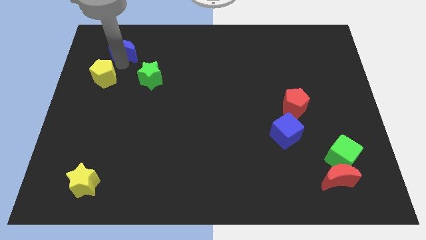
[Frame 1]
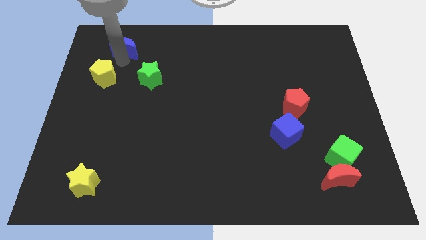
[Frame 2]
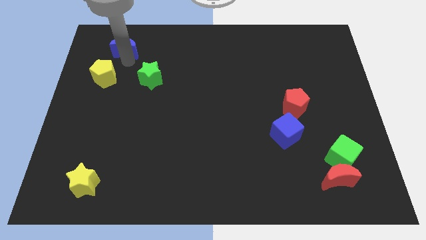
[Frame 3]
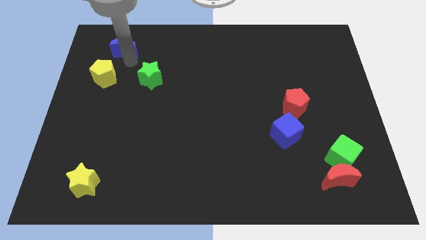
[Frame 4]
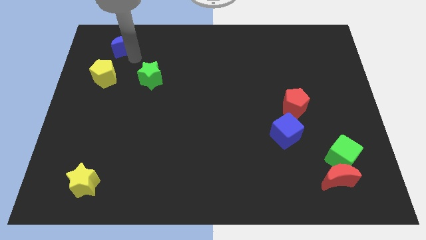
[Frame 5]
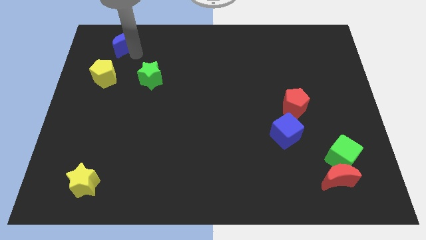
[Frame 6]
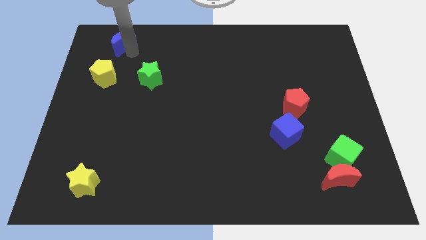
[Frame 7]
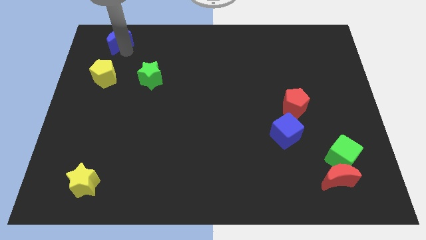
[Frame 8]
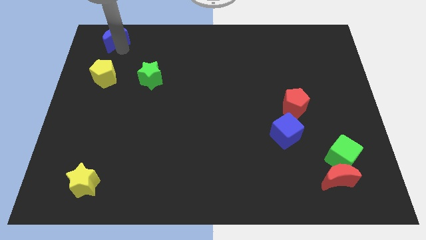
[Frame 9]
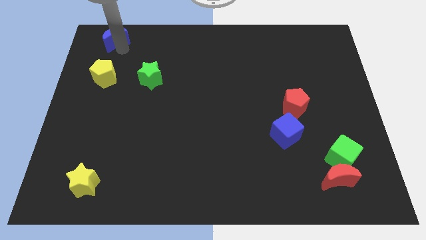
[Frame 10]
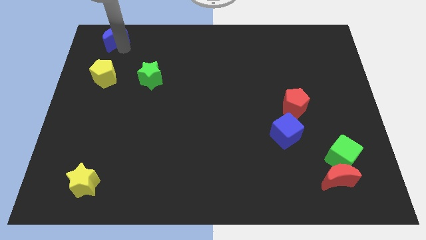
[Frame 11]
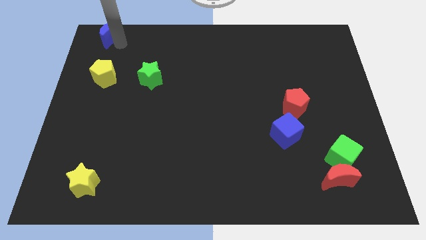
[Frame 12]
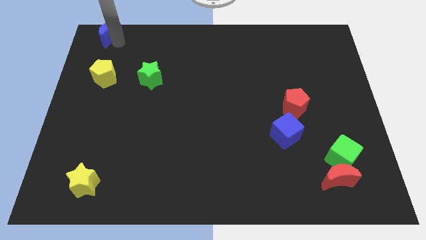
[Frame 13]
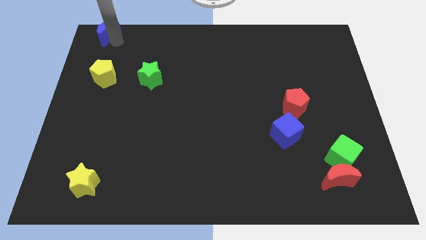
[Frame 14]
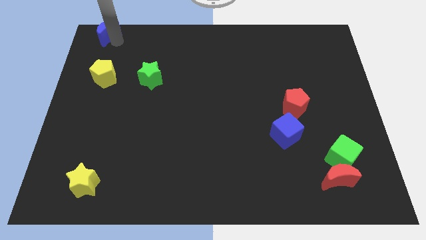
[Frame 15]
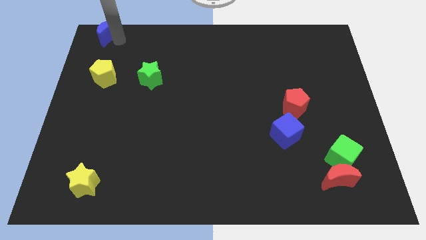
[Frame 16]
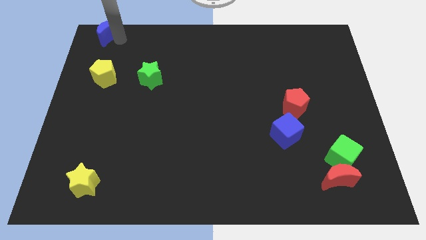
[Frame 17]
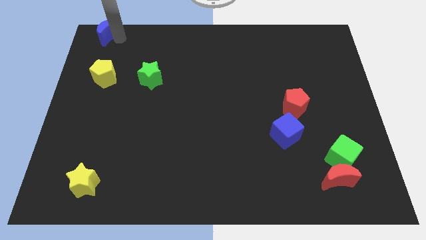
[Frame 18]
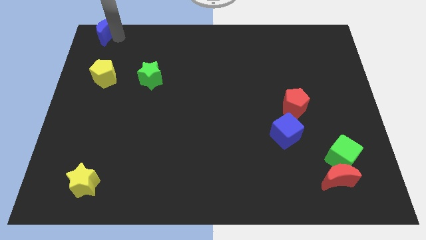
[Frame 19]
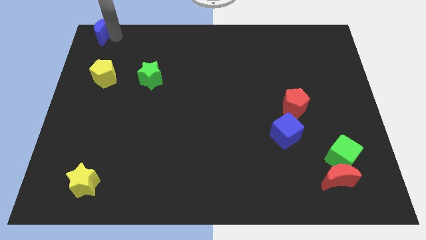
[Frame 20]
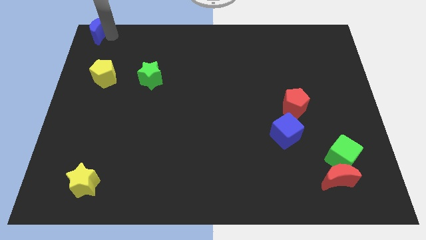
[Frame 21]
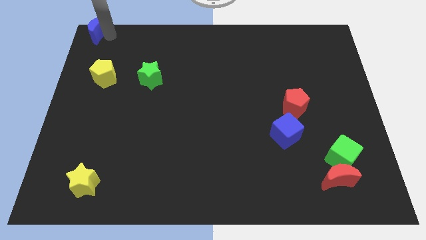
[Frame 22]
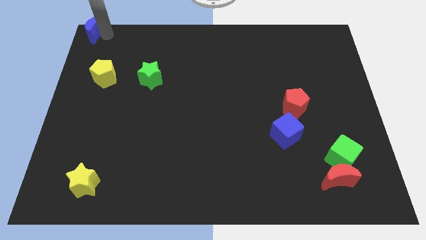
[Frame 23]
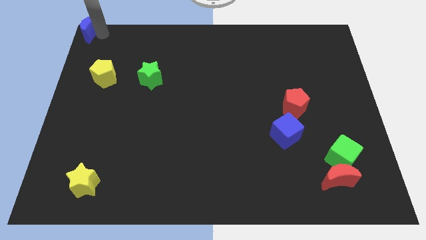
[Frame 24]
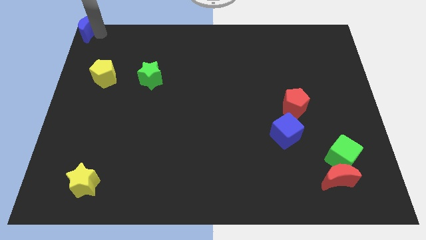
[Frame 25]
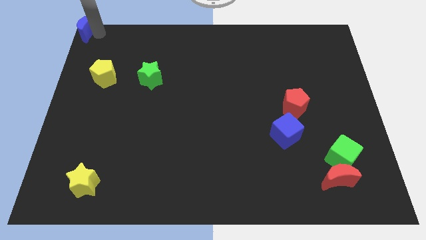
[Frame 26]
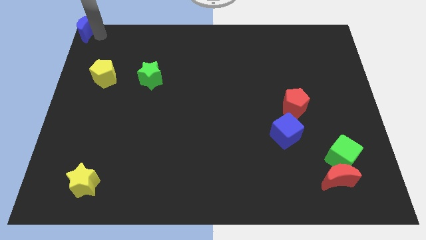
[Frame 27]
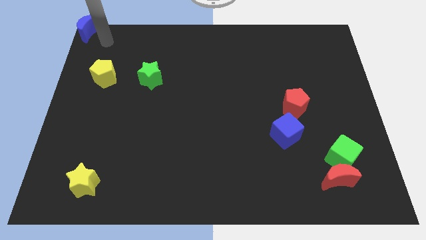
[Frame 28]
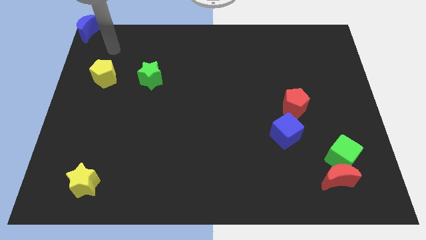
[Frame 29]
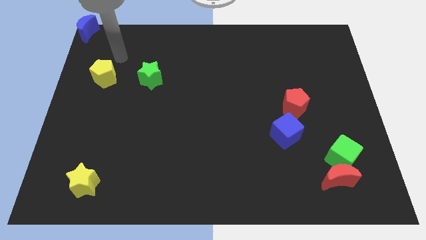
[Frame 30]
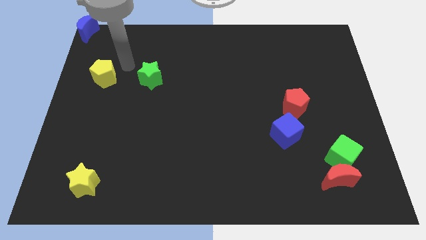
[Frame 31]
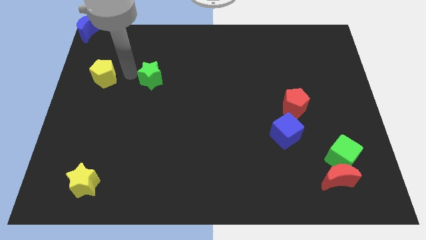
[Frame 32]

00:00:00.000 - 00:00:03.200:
push the blue crescent to the top left

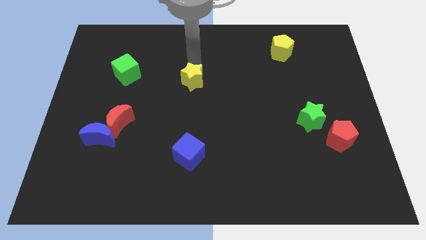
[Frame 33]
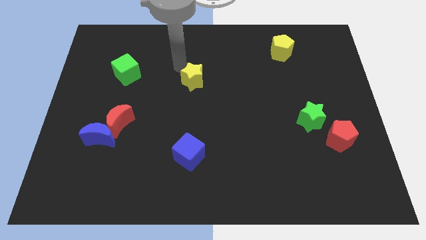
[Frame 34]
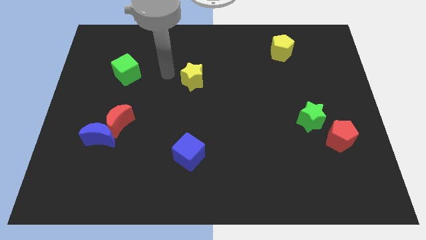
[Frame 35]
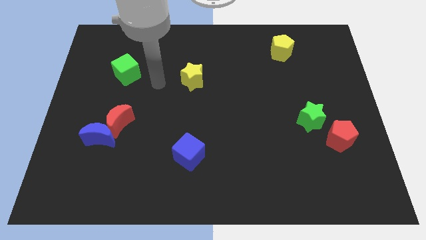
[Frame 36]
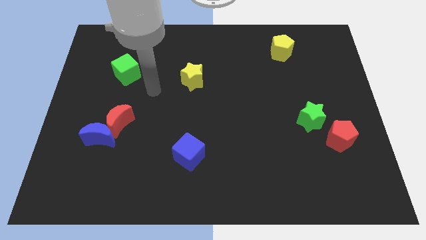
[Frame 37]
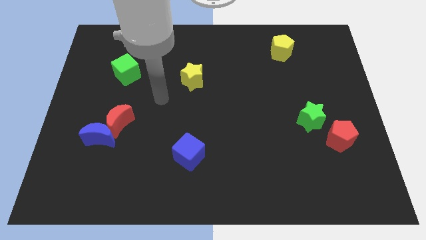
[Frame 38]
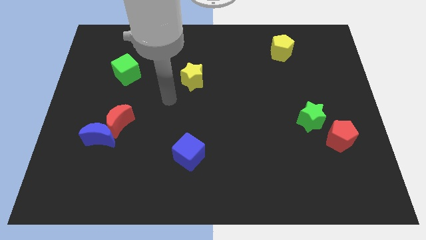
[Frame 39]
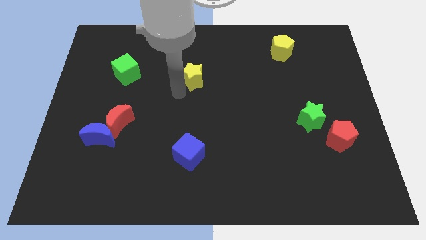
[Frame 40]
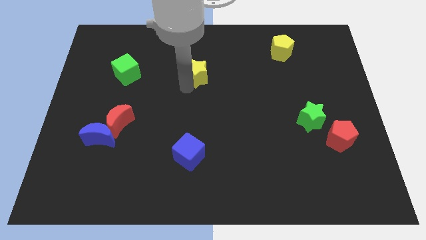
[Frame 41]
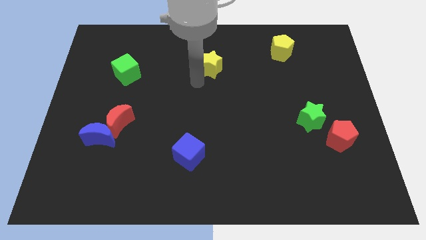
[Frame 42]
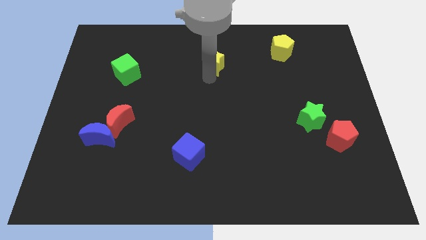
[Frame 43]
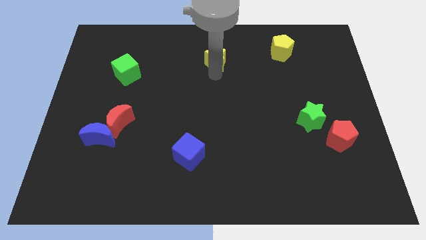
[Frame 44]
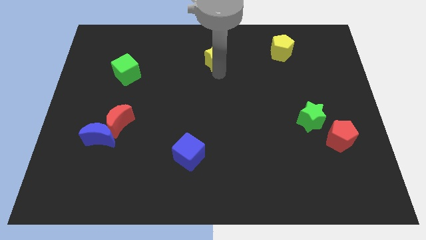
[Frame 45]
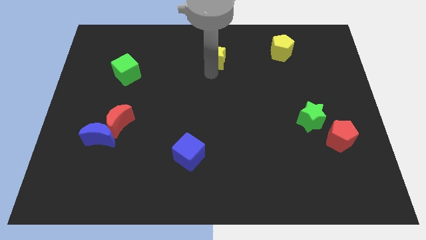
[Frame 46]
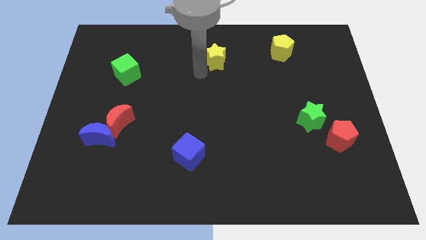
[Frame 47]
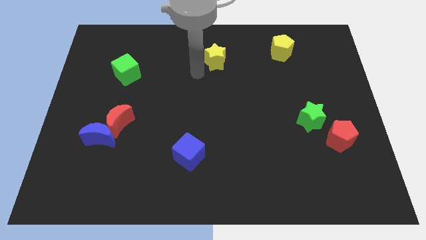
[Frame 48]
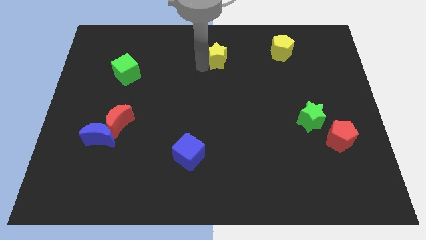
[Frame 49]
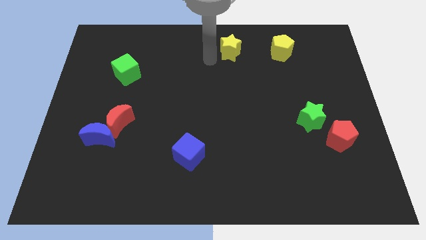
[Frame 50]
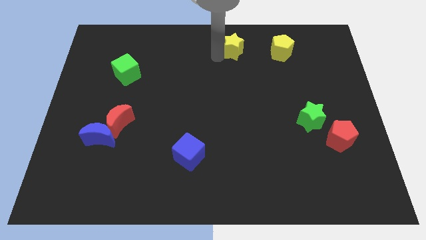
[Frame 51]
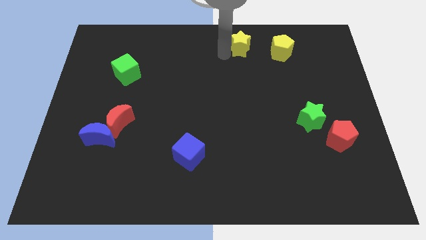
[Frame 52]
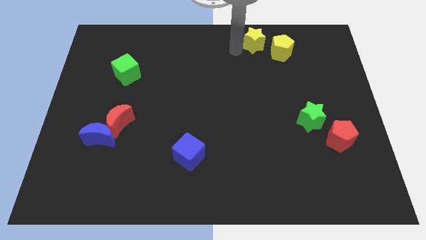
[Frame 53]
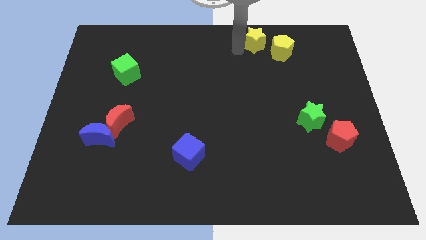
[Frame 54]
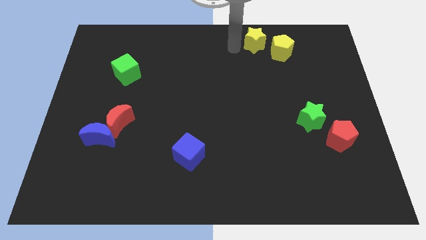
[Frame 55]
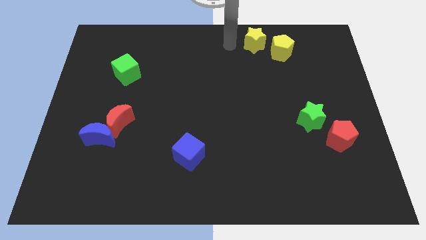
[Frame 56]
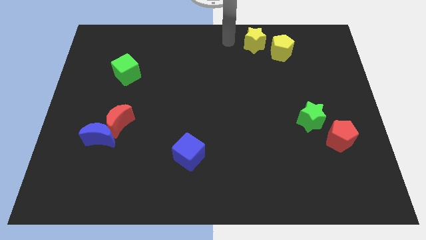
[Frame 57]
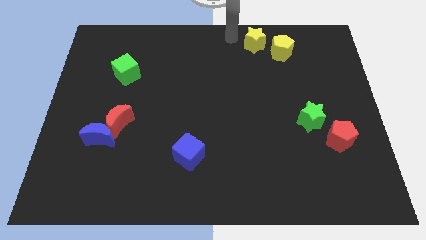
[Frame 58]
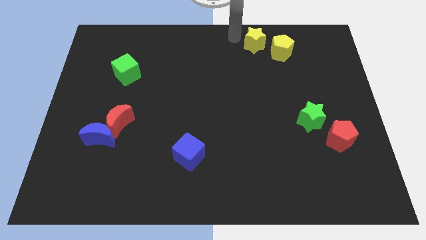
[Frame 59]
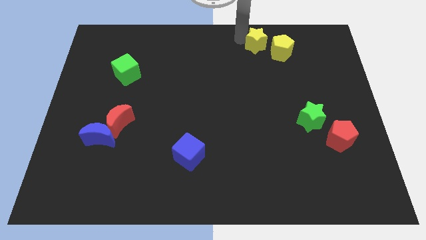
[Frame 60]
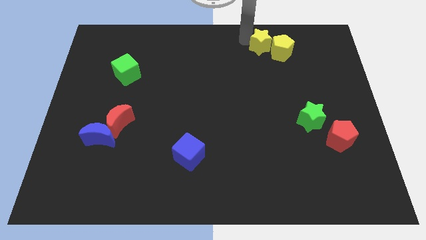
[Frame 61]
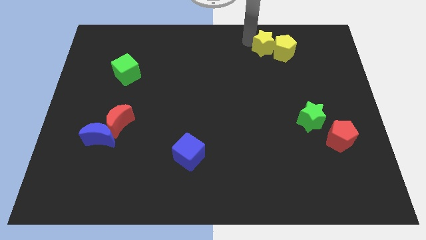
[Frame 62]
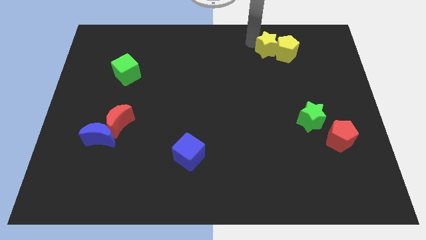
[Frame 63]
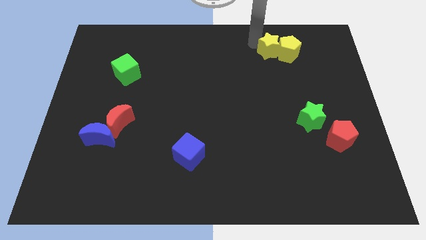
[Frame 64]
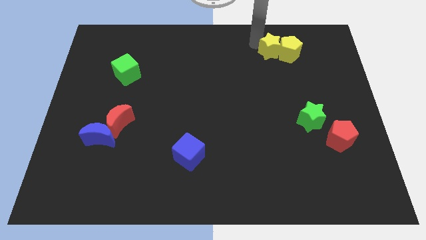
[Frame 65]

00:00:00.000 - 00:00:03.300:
move the yellow star into the left side of the yellow pentagon

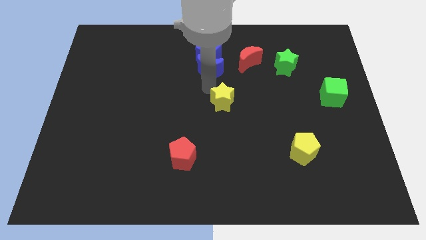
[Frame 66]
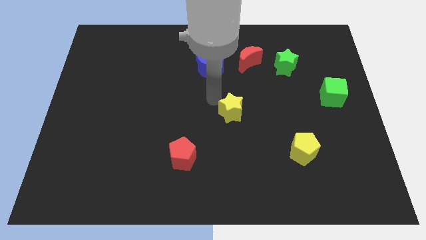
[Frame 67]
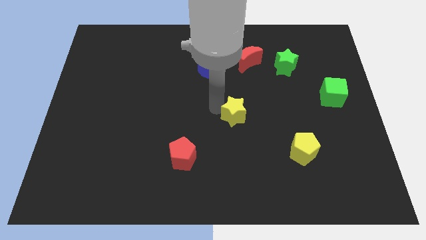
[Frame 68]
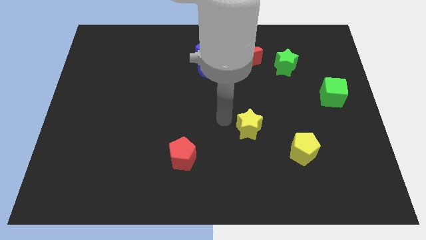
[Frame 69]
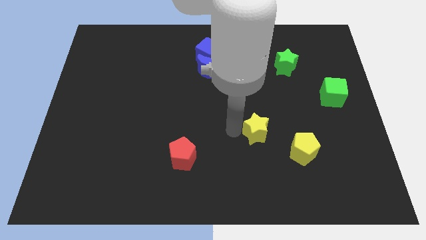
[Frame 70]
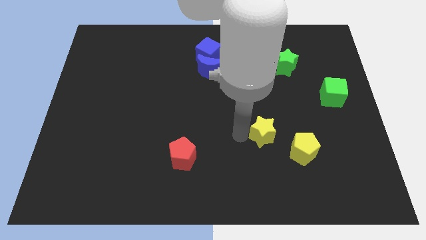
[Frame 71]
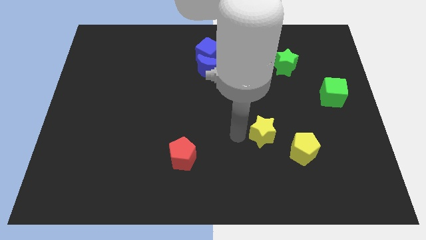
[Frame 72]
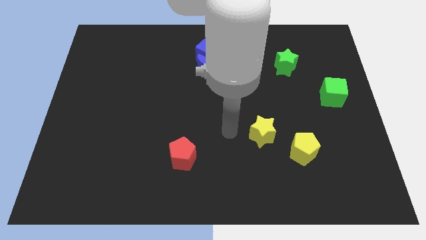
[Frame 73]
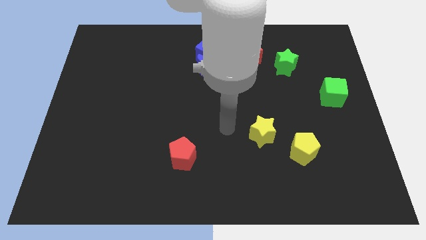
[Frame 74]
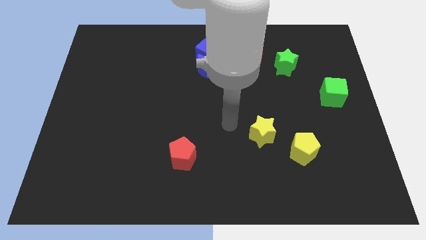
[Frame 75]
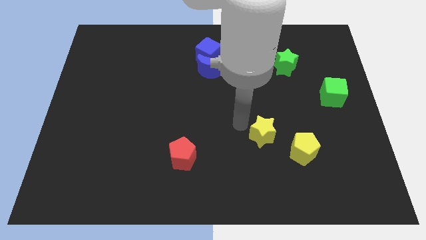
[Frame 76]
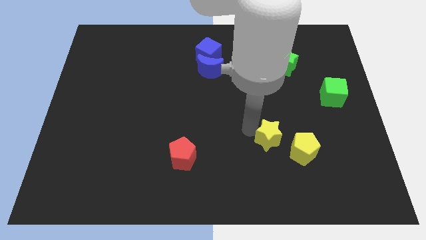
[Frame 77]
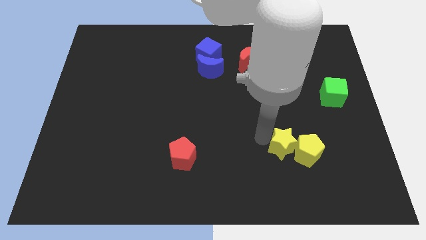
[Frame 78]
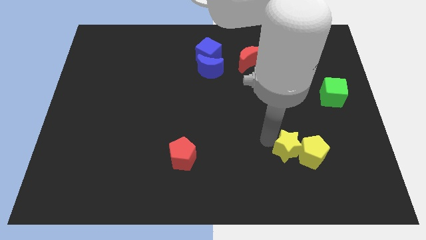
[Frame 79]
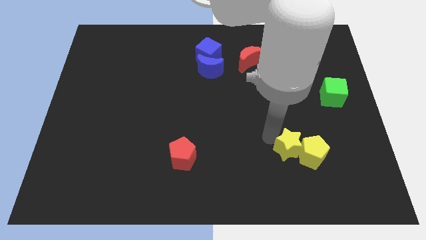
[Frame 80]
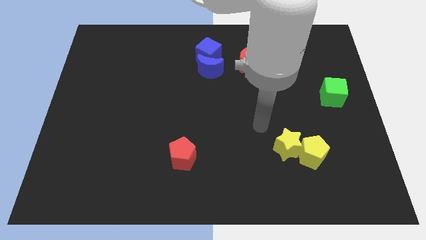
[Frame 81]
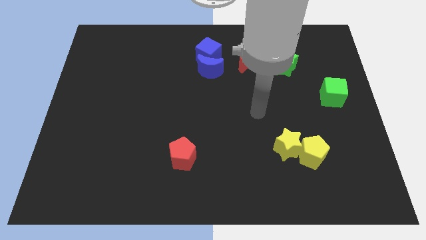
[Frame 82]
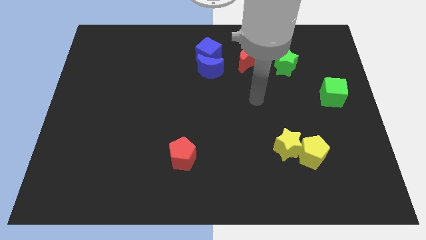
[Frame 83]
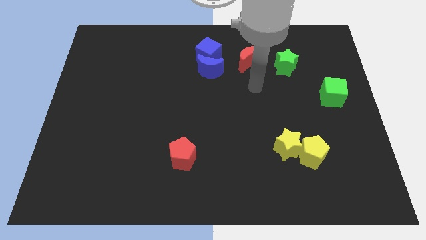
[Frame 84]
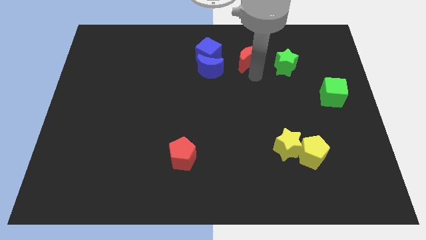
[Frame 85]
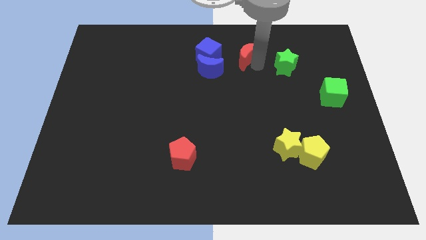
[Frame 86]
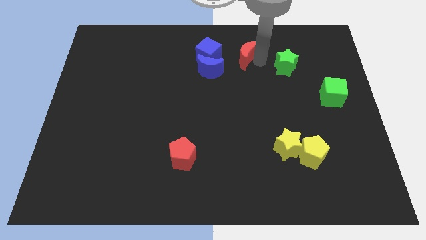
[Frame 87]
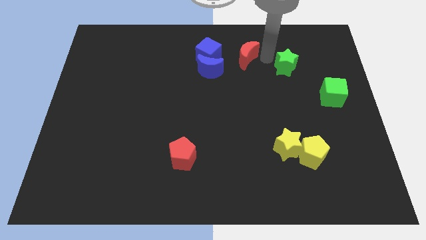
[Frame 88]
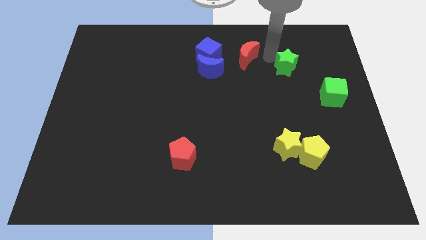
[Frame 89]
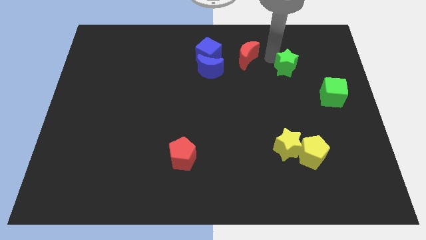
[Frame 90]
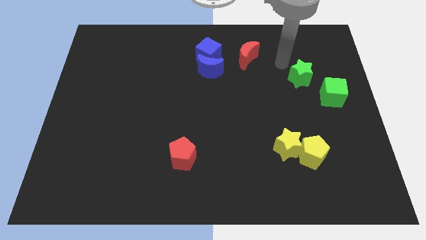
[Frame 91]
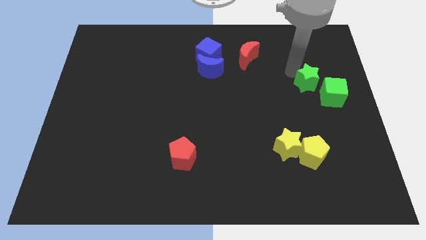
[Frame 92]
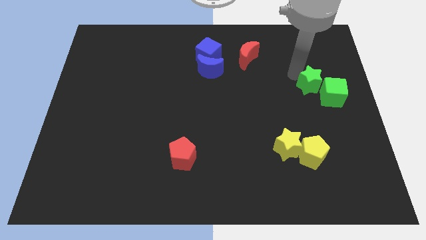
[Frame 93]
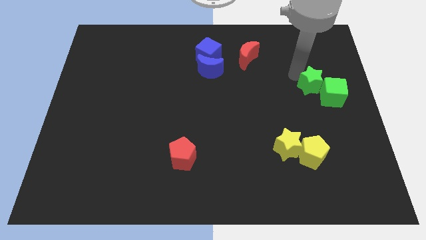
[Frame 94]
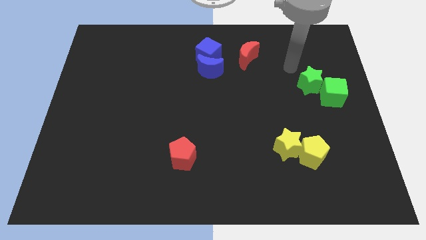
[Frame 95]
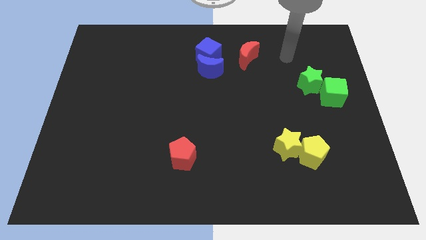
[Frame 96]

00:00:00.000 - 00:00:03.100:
push the yellow star into yellow pentagon and green star into green cube
